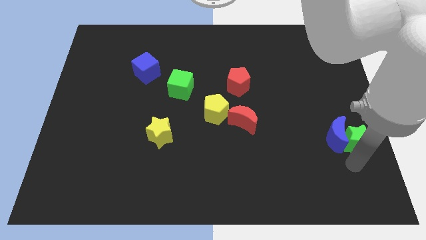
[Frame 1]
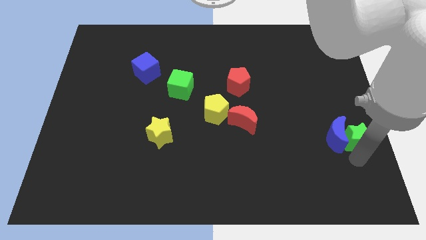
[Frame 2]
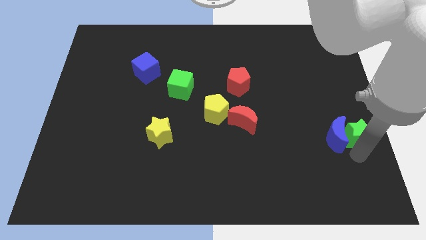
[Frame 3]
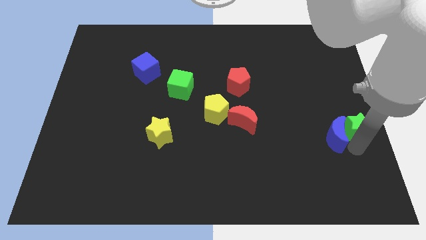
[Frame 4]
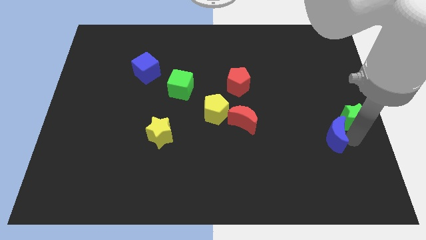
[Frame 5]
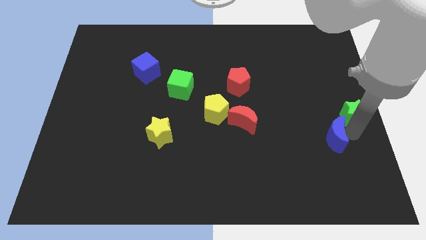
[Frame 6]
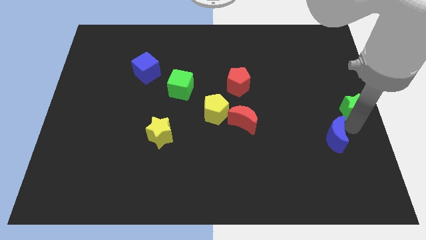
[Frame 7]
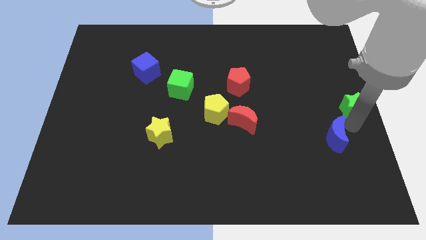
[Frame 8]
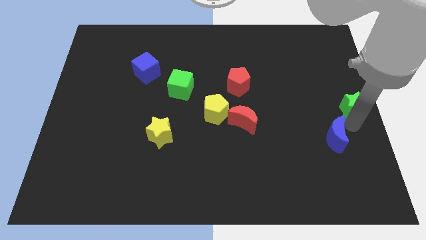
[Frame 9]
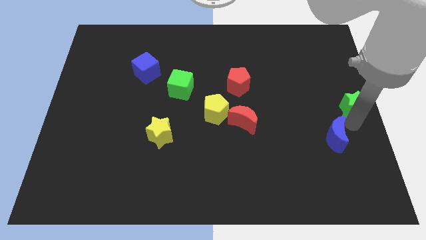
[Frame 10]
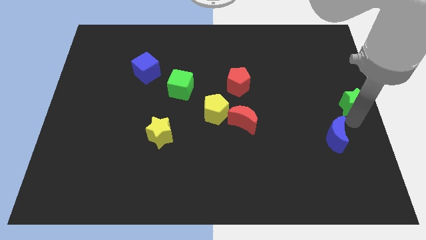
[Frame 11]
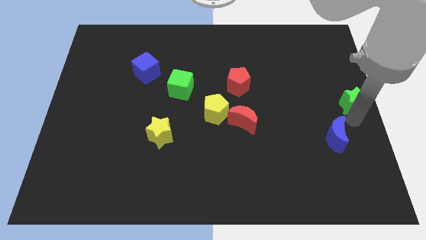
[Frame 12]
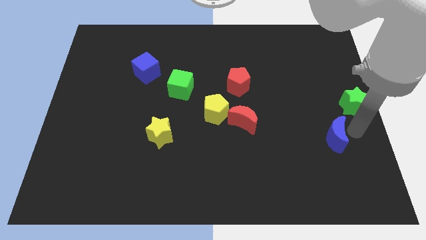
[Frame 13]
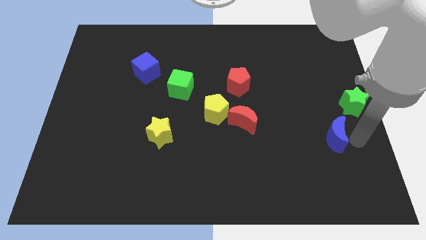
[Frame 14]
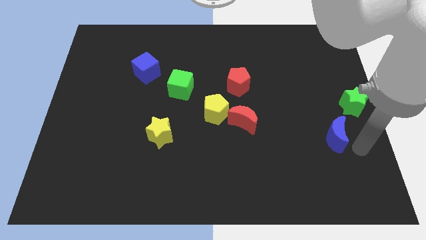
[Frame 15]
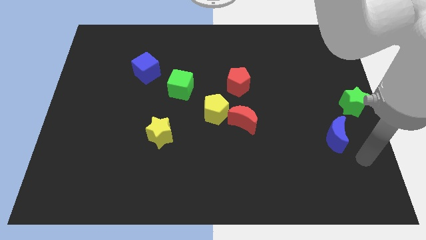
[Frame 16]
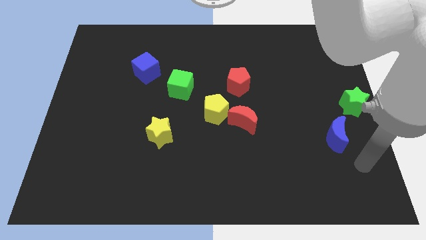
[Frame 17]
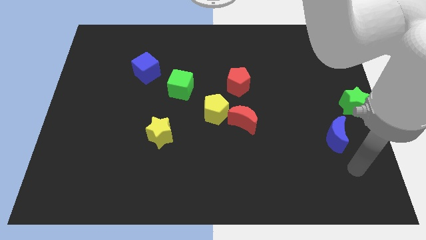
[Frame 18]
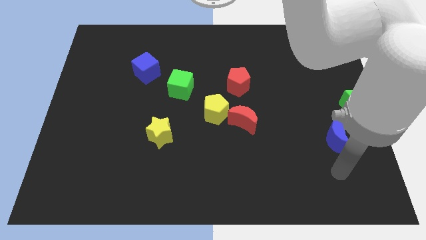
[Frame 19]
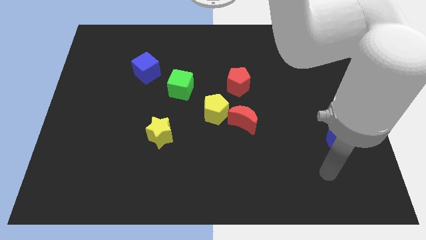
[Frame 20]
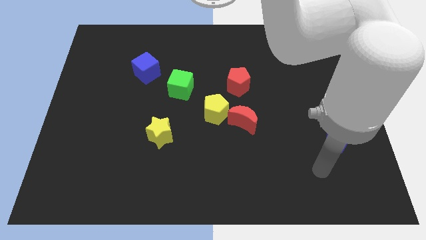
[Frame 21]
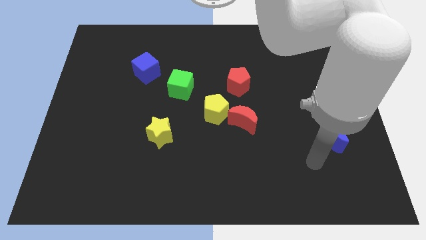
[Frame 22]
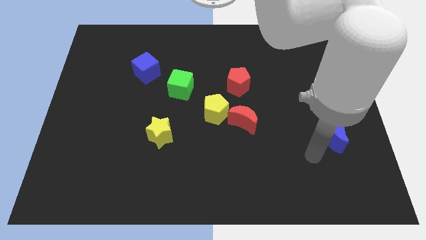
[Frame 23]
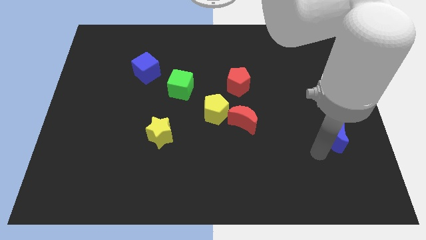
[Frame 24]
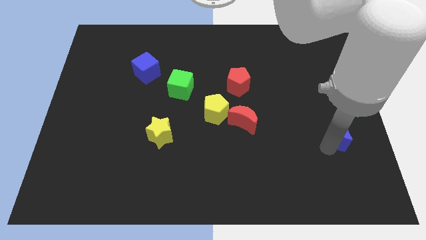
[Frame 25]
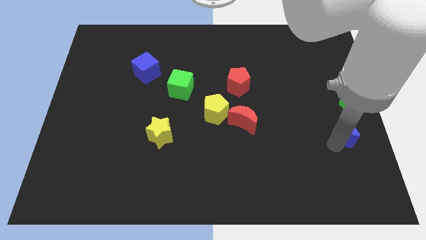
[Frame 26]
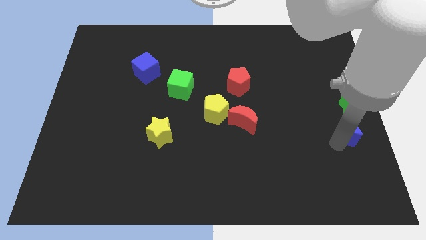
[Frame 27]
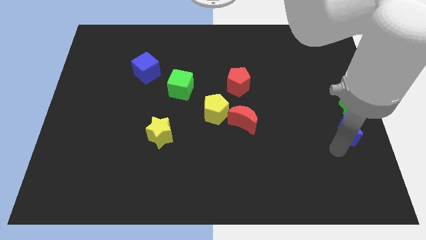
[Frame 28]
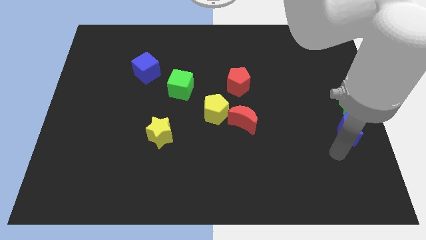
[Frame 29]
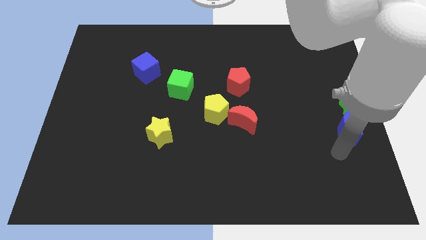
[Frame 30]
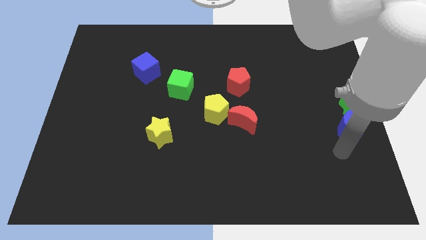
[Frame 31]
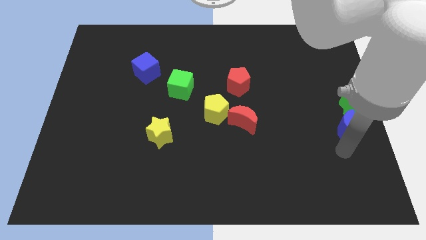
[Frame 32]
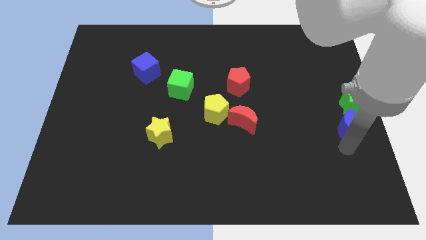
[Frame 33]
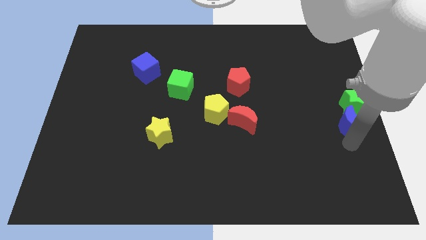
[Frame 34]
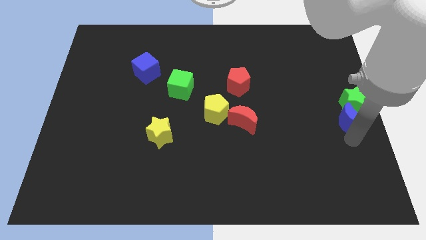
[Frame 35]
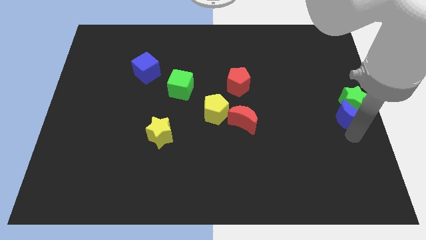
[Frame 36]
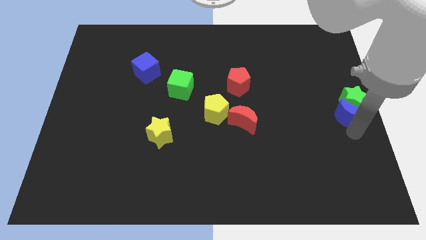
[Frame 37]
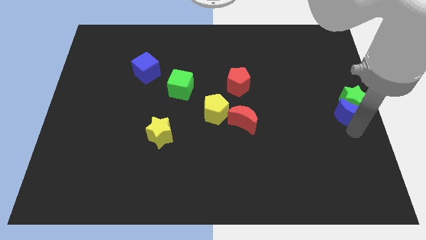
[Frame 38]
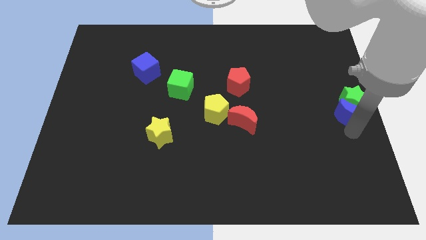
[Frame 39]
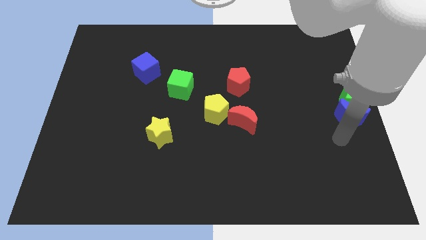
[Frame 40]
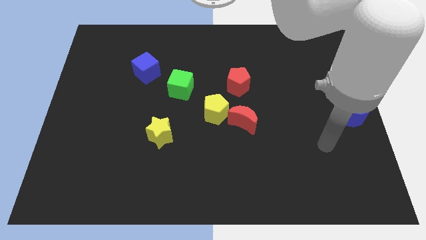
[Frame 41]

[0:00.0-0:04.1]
move the green star into blue crescent towards the right center of the board

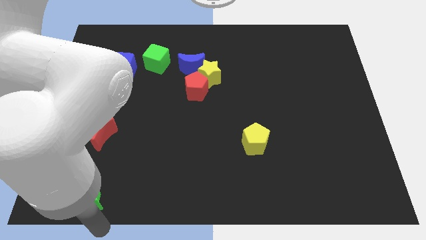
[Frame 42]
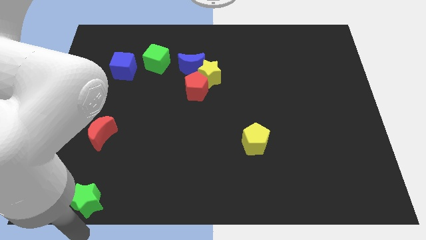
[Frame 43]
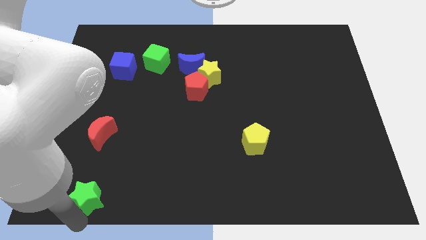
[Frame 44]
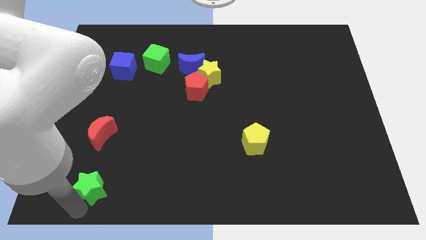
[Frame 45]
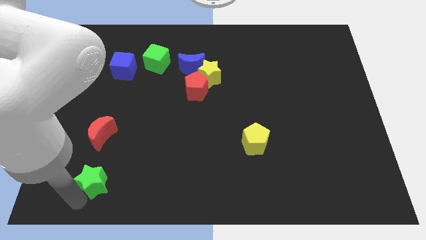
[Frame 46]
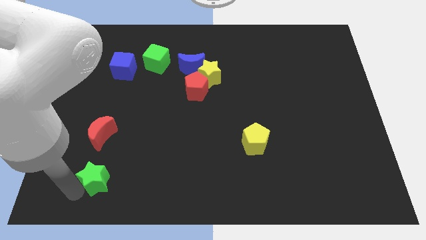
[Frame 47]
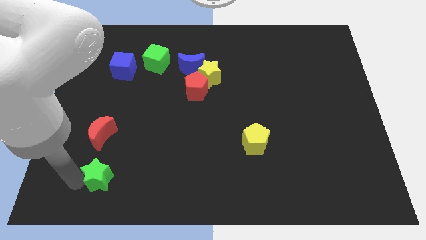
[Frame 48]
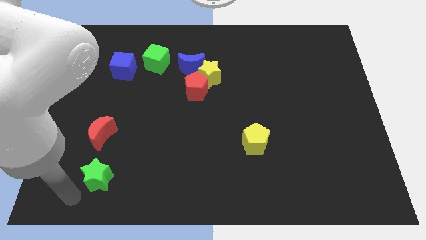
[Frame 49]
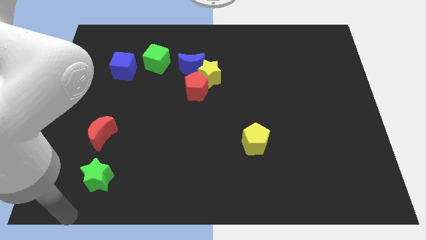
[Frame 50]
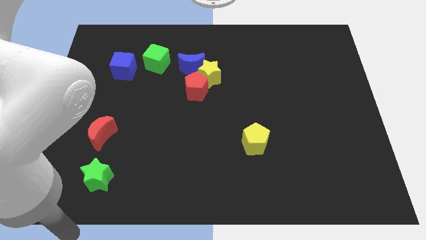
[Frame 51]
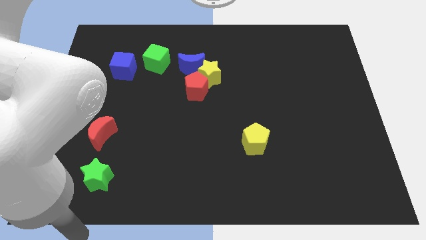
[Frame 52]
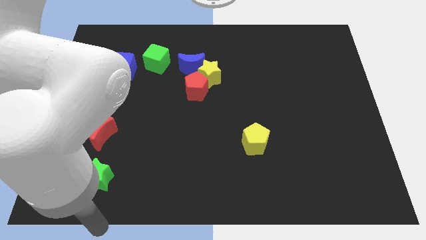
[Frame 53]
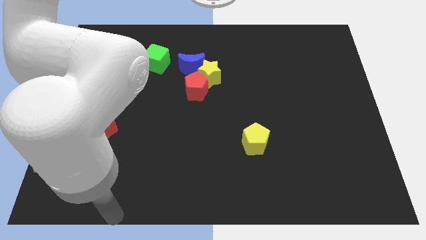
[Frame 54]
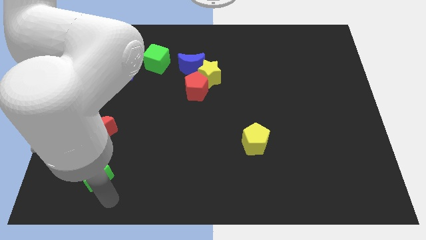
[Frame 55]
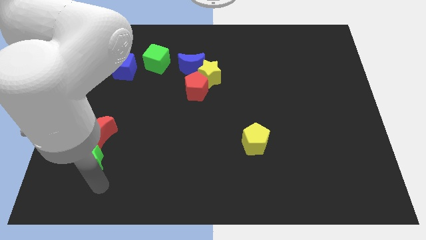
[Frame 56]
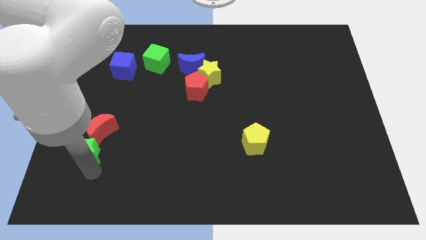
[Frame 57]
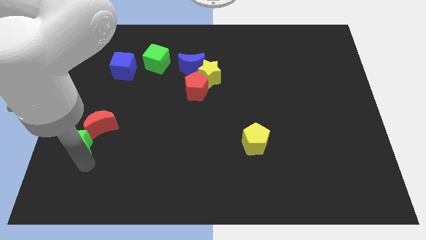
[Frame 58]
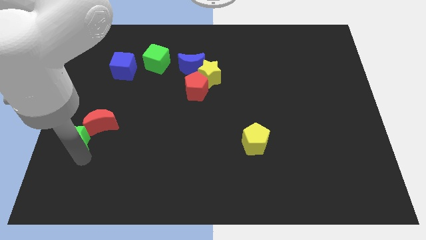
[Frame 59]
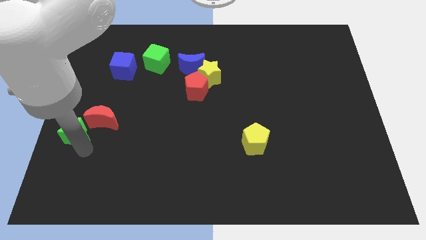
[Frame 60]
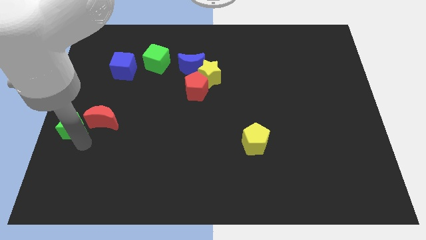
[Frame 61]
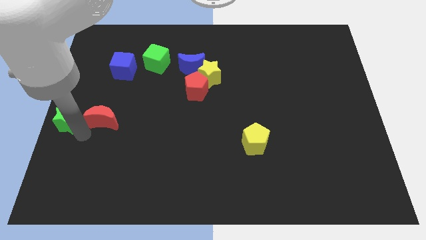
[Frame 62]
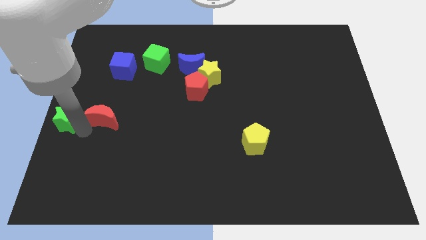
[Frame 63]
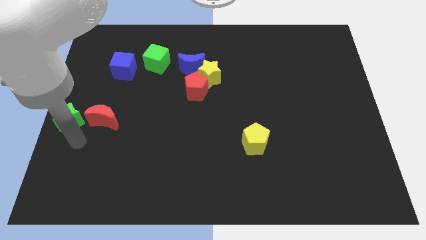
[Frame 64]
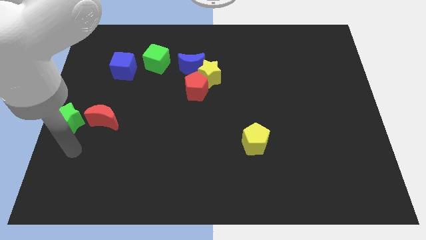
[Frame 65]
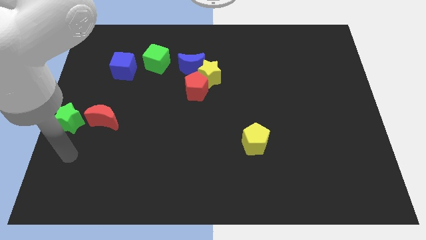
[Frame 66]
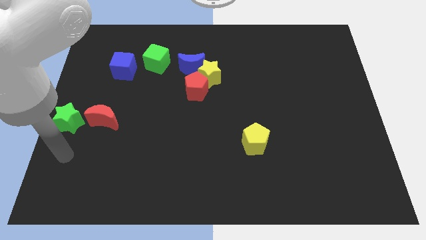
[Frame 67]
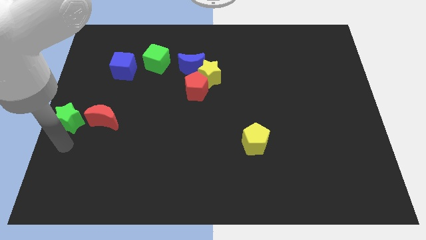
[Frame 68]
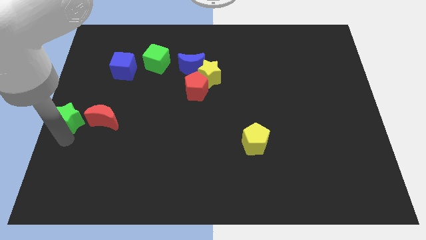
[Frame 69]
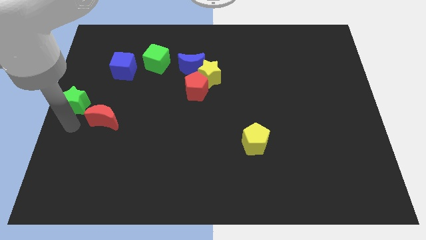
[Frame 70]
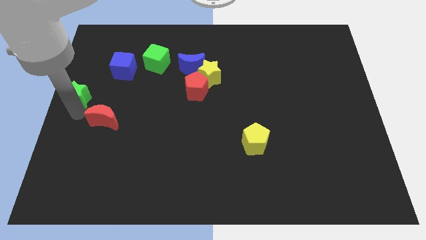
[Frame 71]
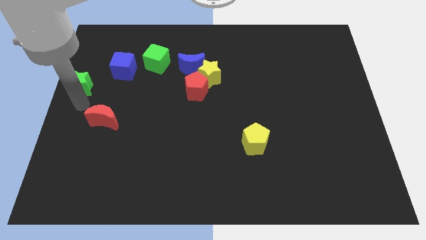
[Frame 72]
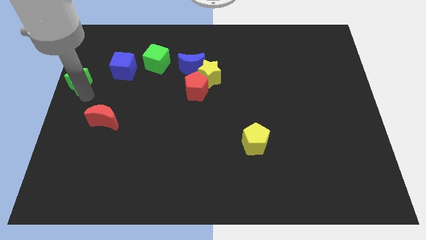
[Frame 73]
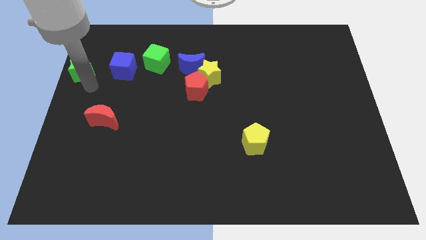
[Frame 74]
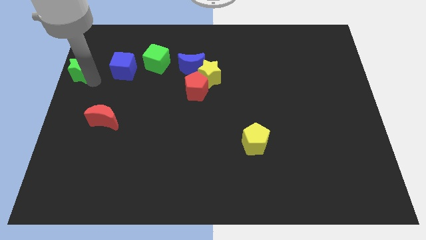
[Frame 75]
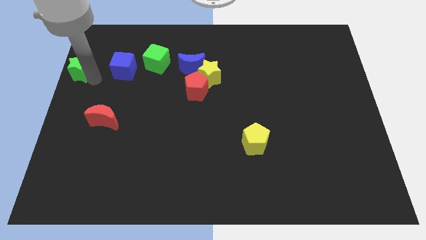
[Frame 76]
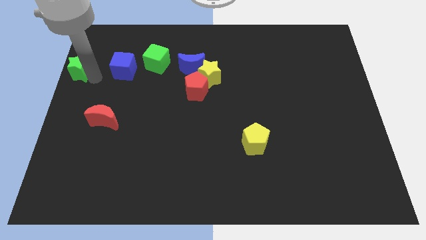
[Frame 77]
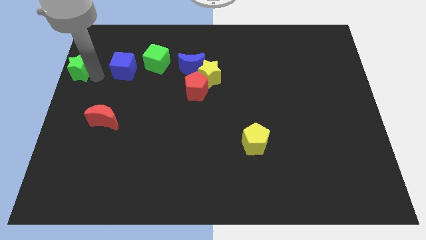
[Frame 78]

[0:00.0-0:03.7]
push the green star parallel to blue cube

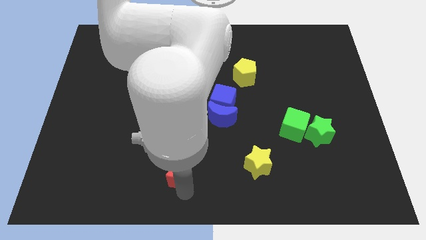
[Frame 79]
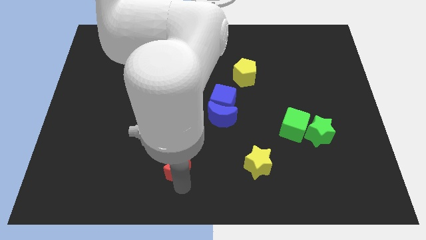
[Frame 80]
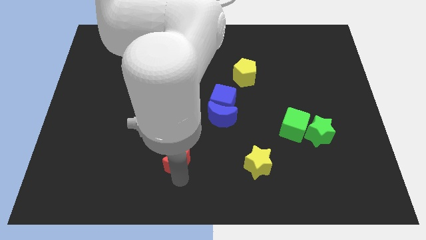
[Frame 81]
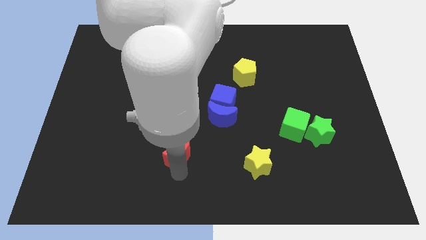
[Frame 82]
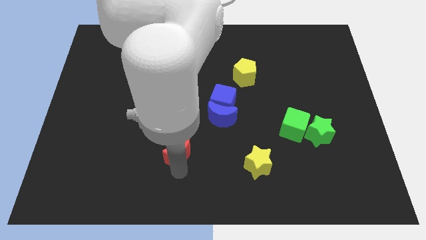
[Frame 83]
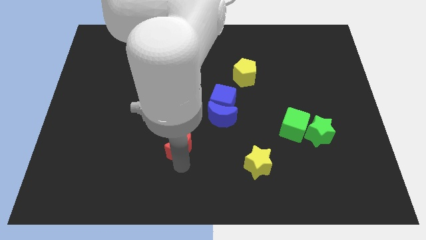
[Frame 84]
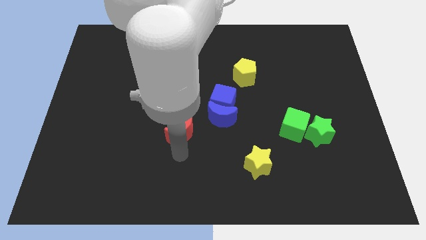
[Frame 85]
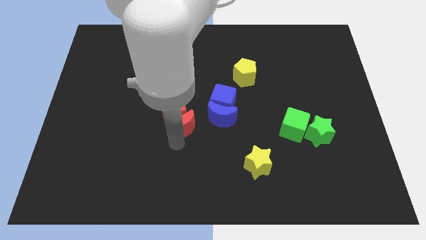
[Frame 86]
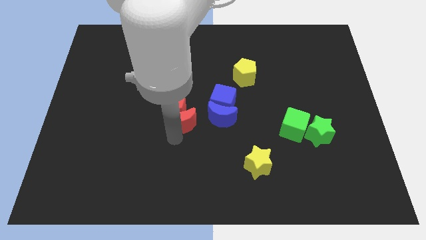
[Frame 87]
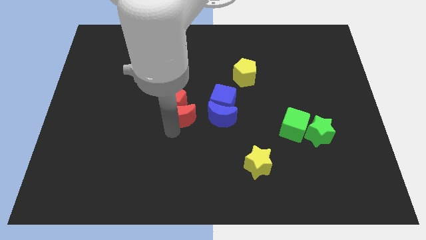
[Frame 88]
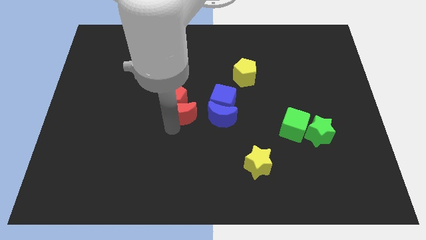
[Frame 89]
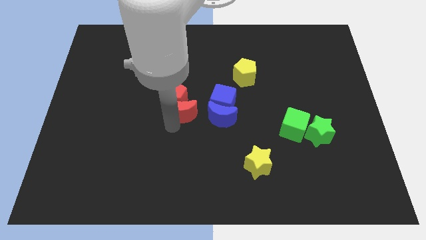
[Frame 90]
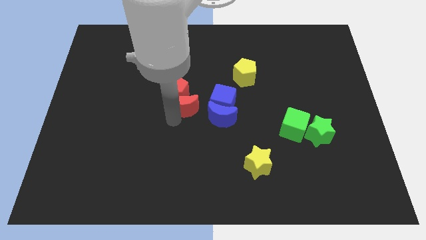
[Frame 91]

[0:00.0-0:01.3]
move the red crescent into the red pentagon
